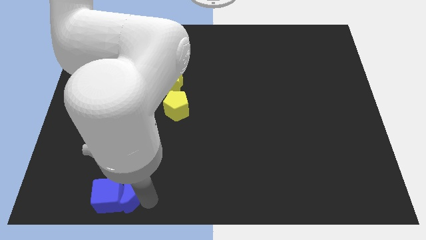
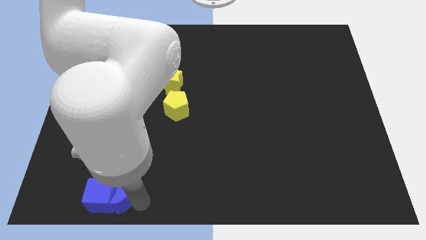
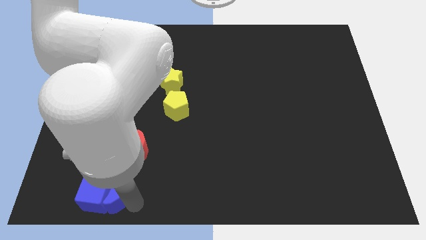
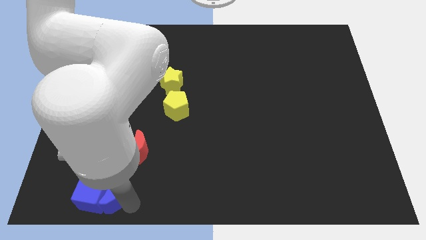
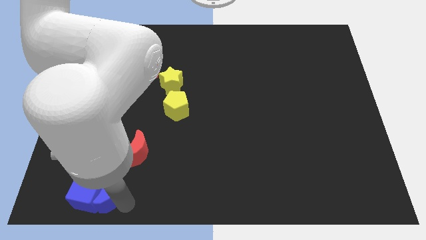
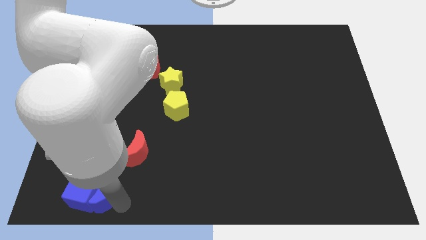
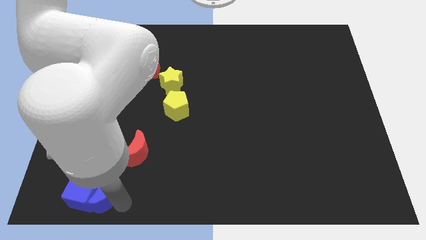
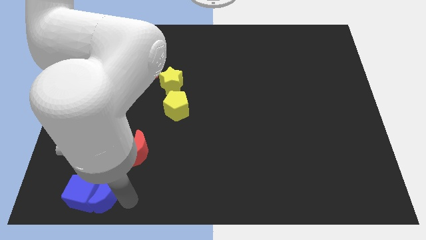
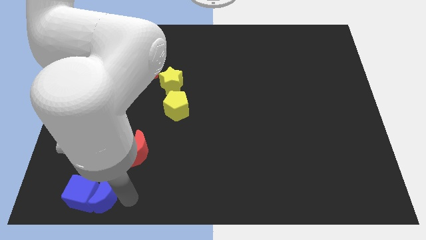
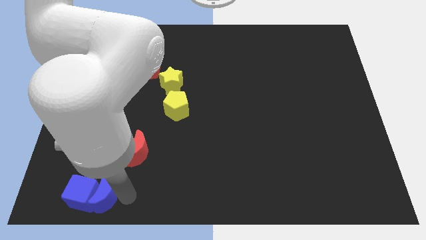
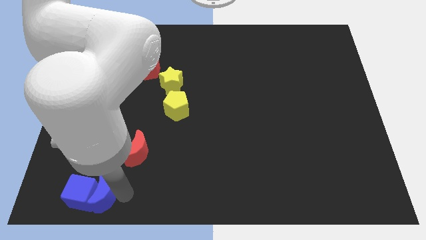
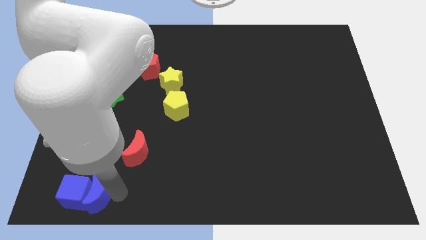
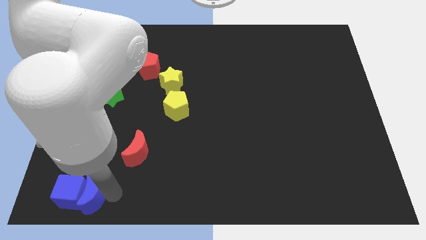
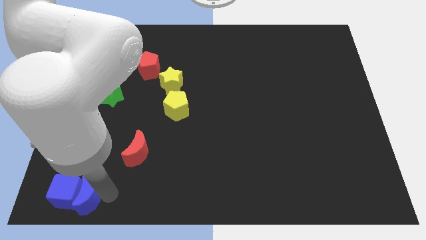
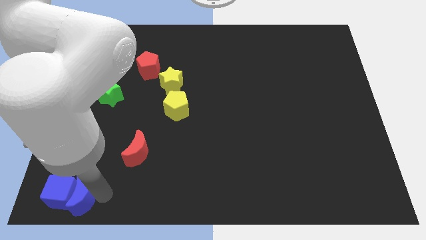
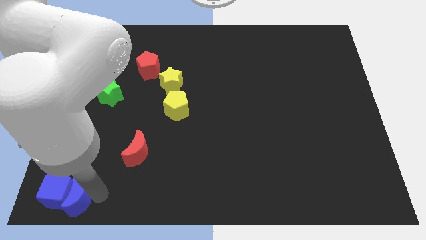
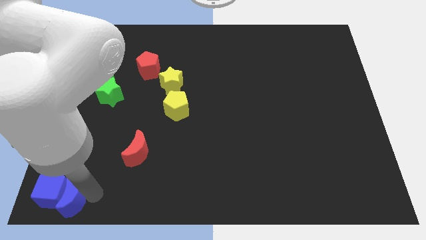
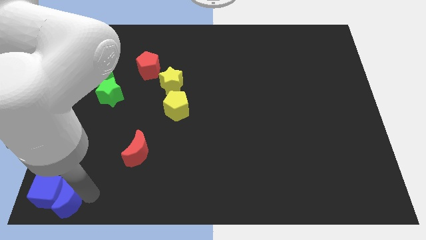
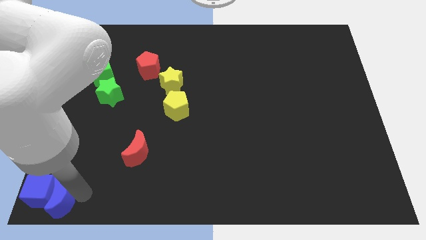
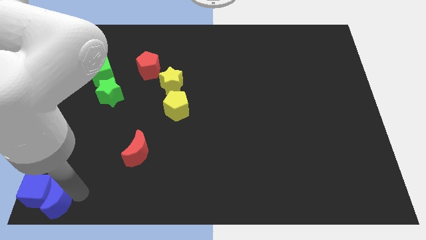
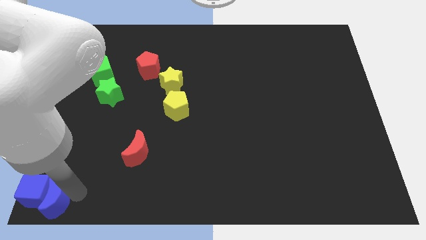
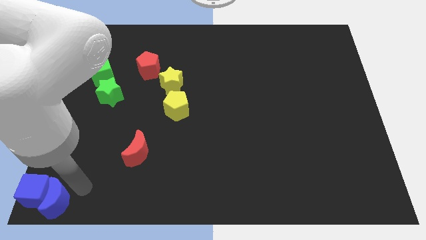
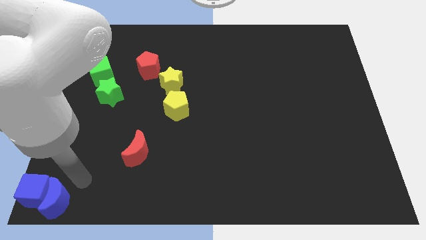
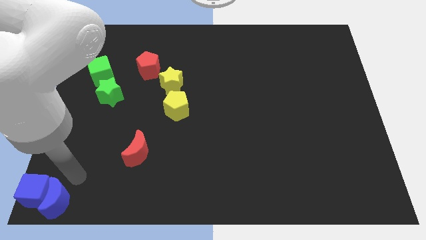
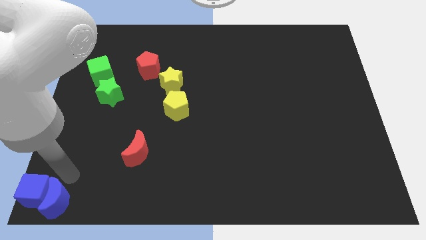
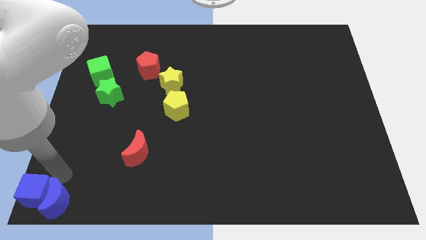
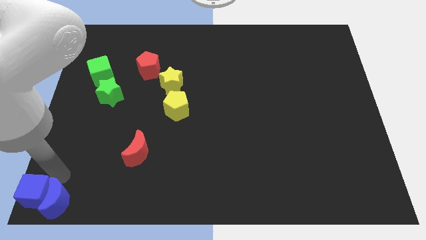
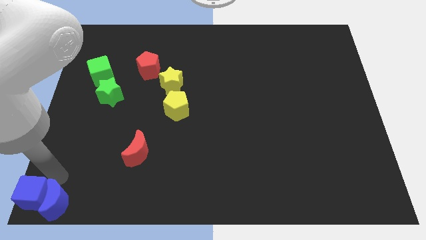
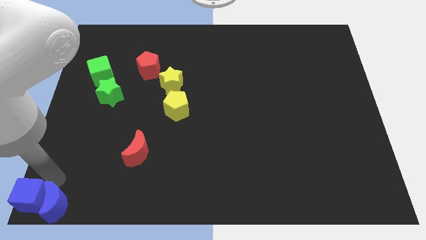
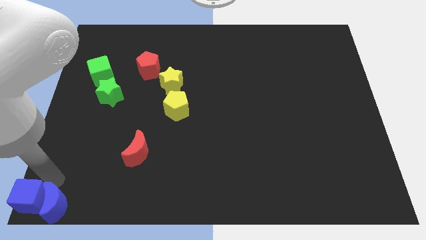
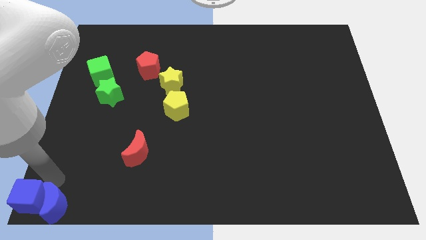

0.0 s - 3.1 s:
push the blue crescent to the bottom left

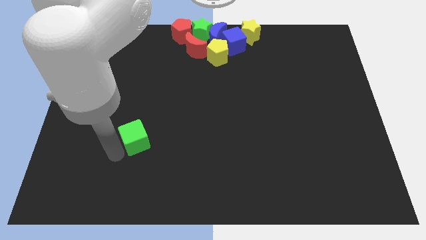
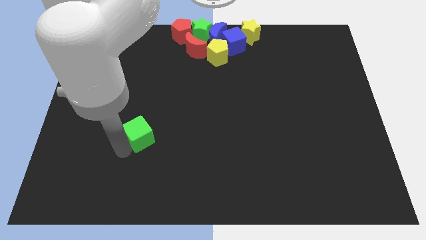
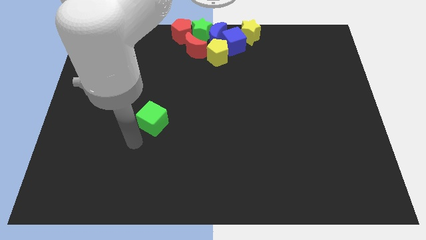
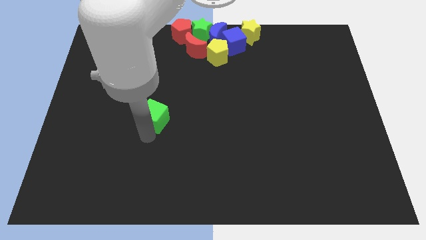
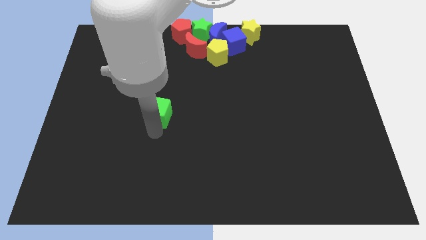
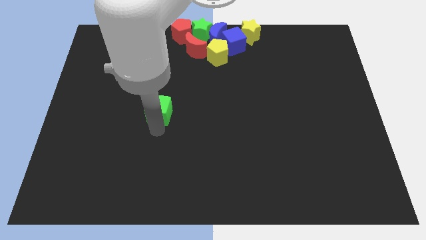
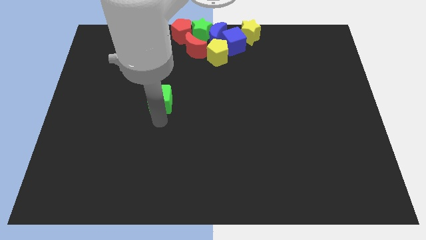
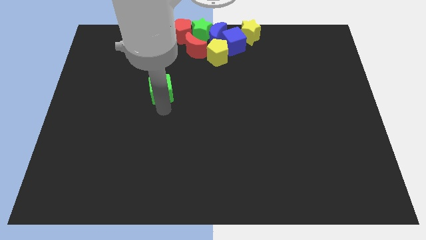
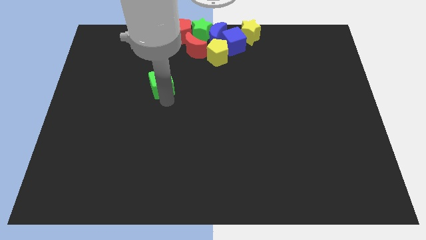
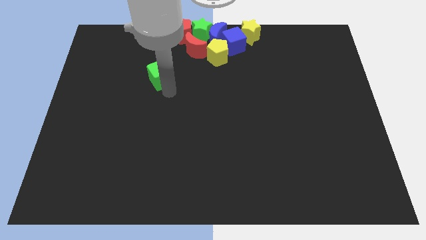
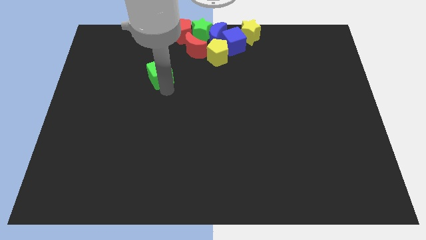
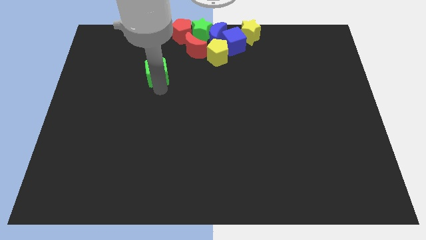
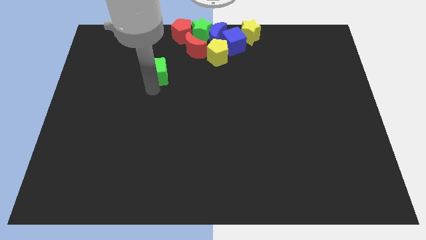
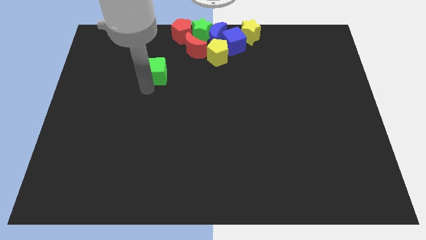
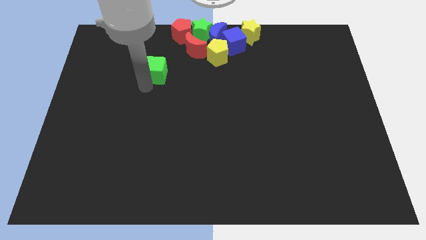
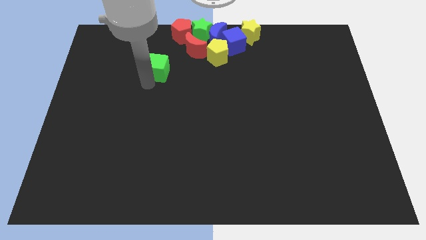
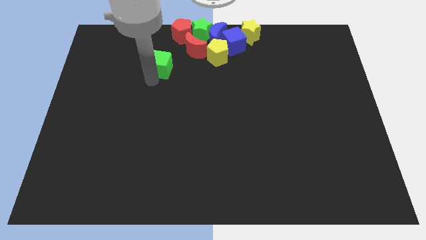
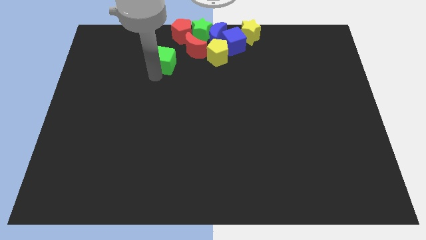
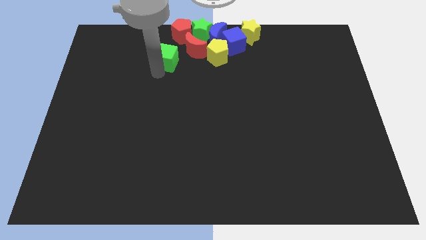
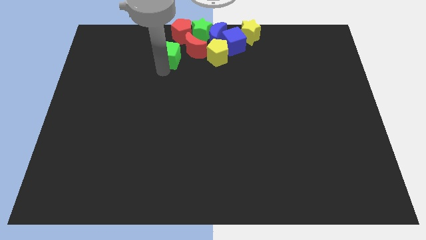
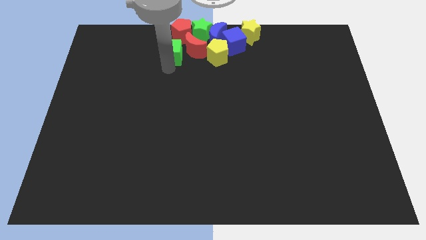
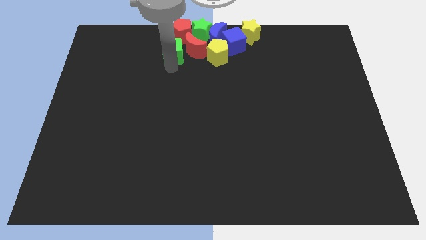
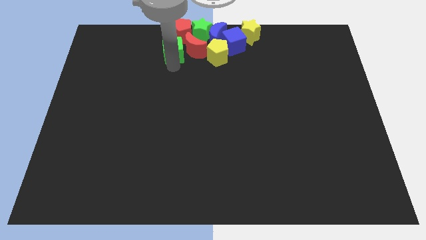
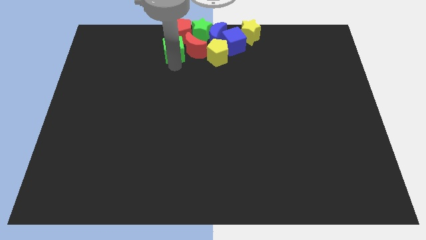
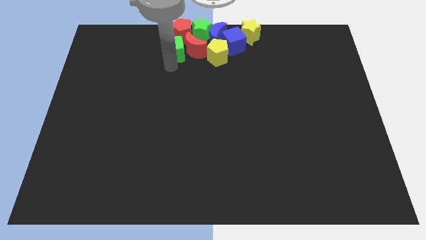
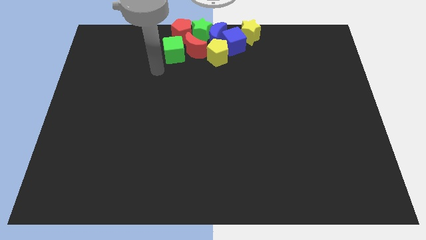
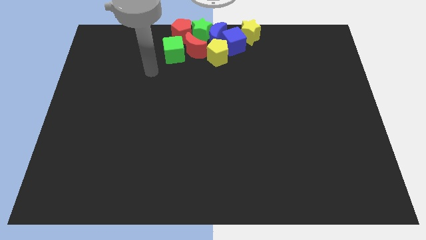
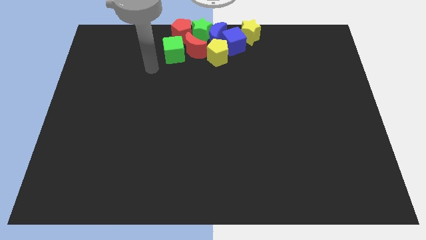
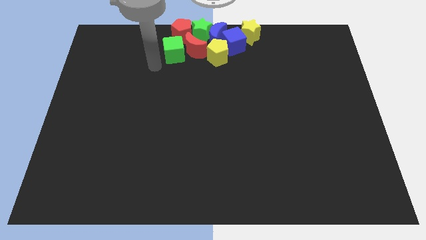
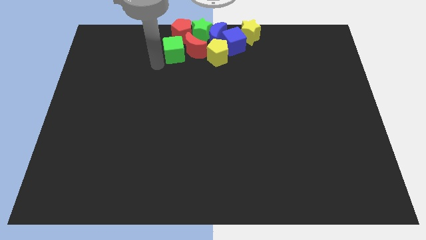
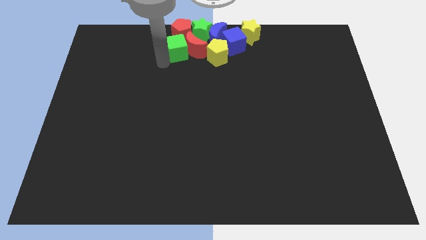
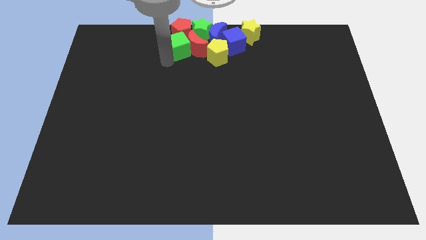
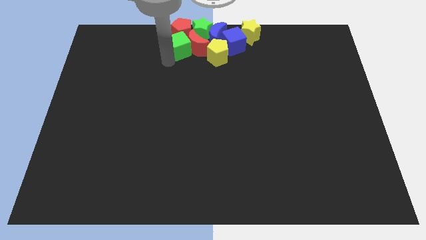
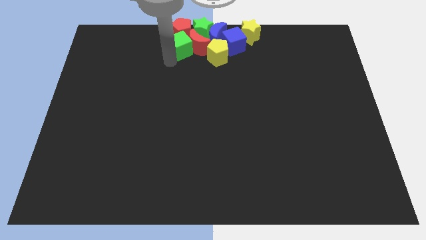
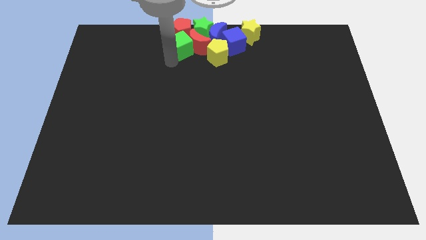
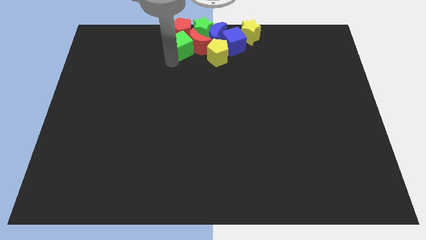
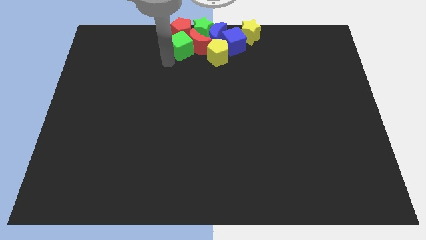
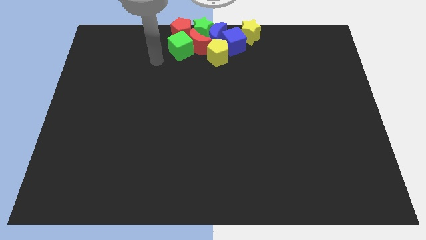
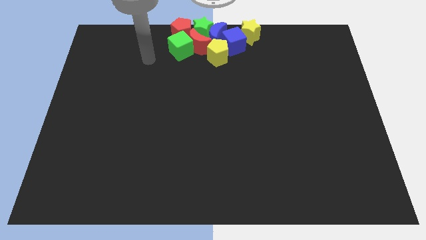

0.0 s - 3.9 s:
push the green cube to the group of blocks

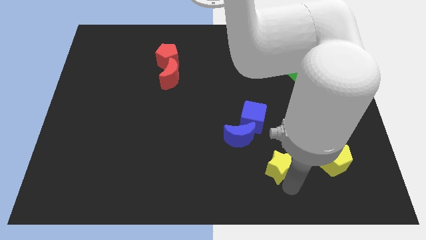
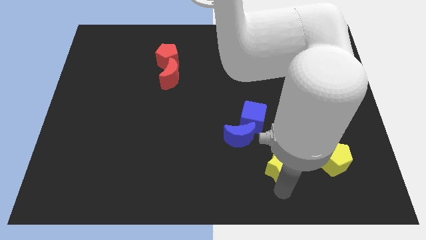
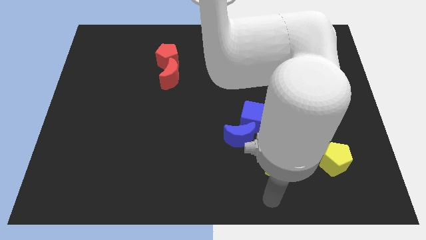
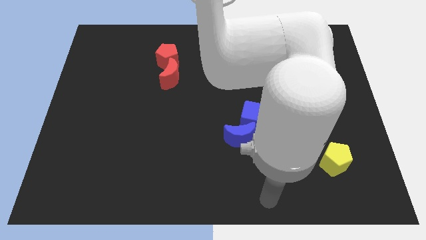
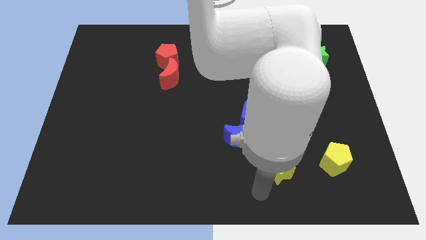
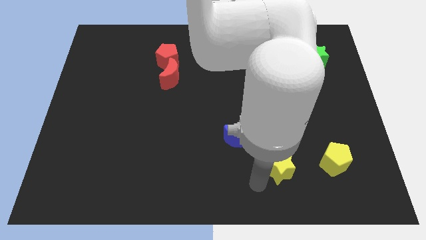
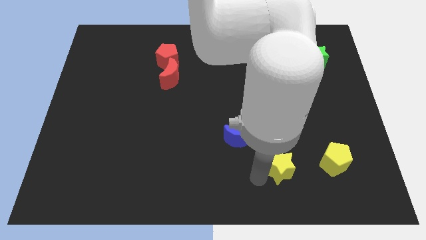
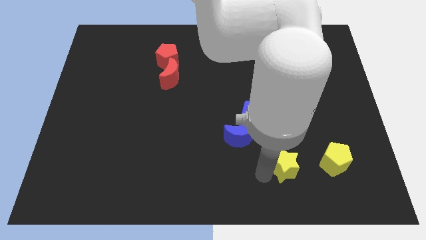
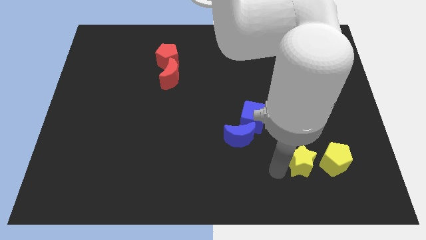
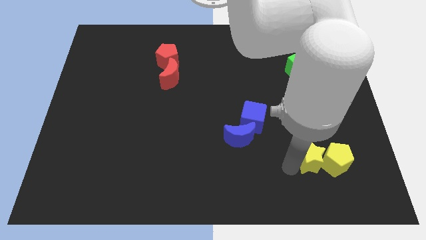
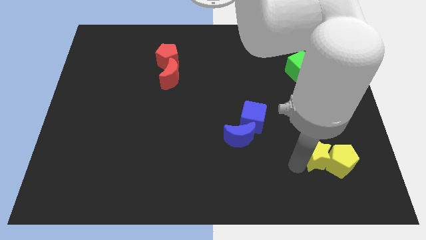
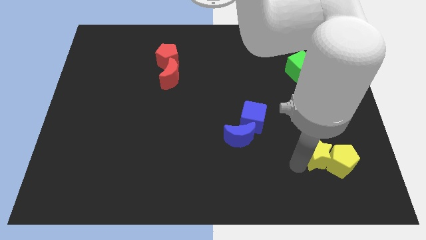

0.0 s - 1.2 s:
move the yellow star into the yellow pentagon

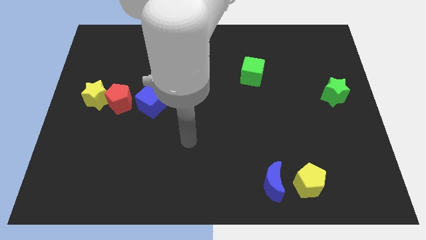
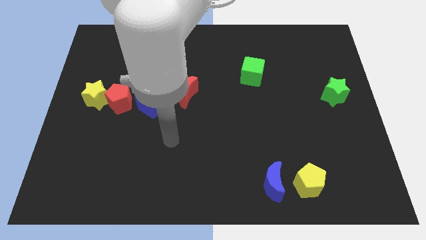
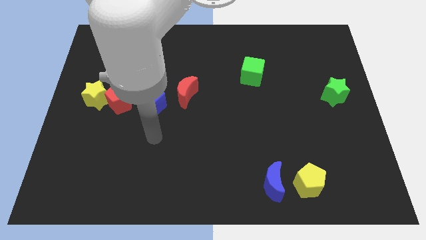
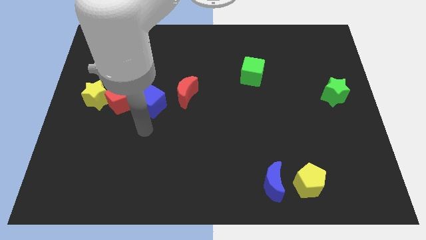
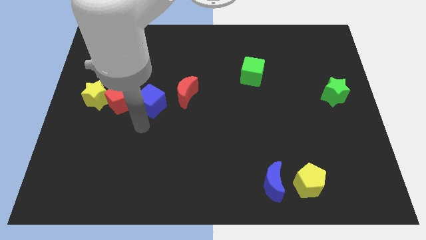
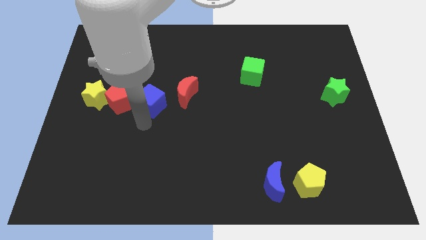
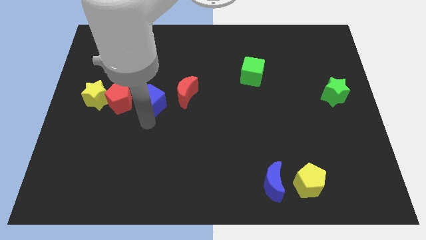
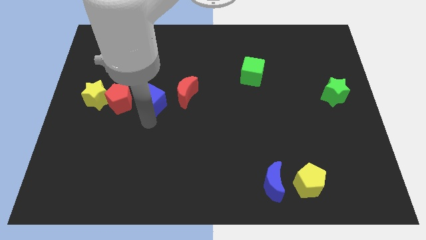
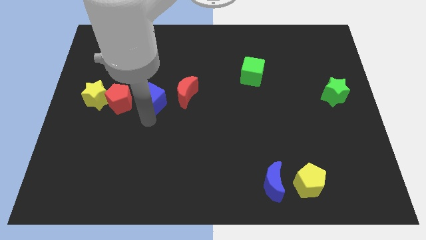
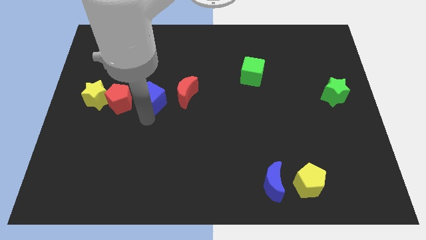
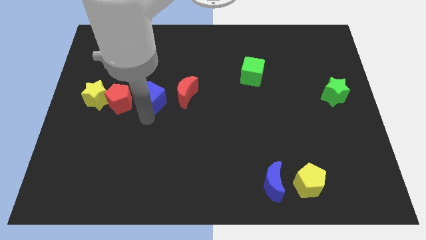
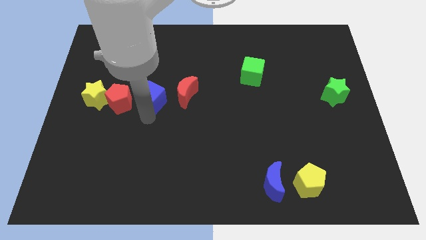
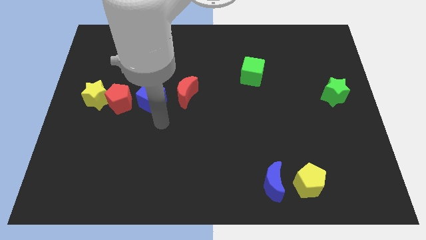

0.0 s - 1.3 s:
move the blue cube slightly up
